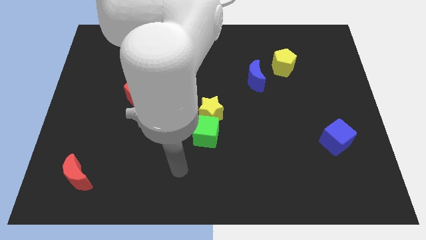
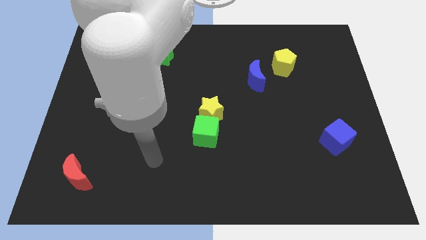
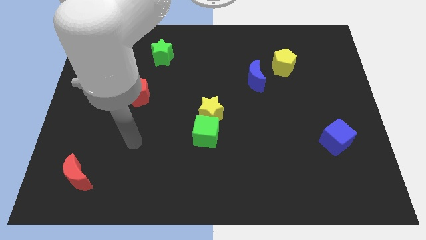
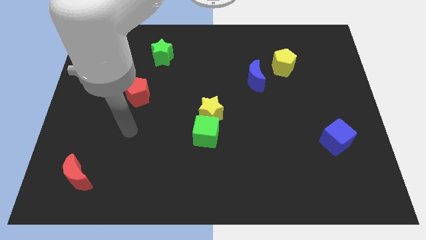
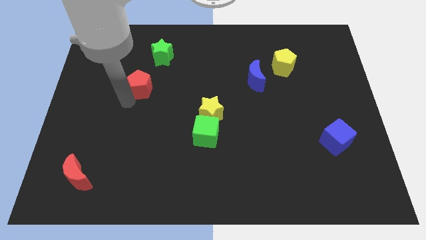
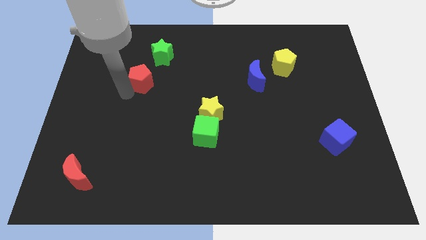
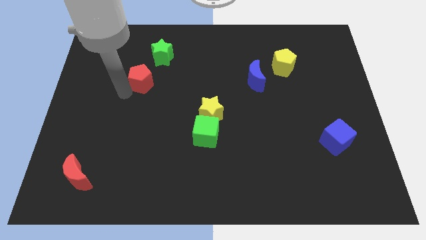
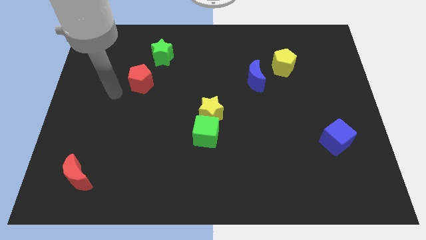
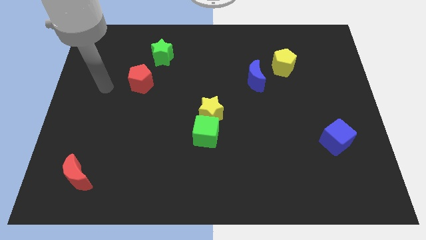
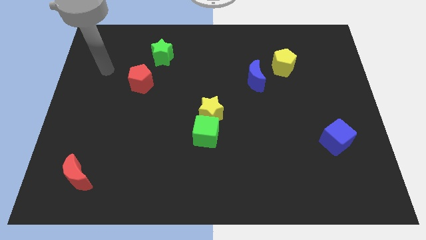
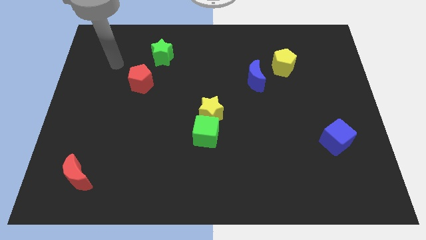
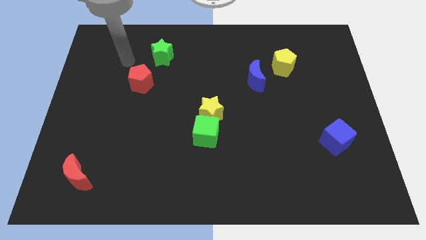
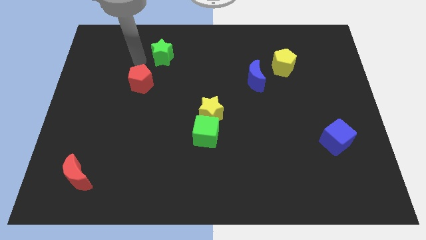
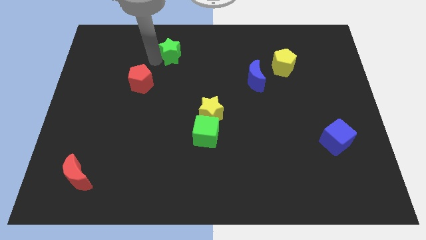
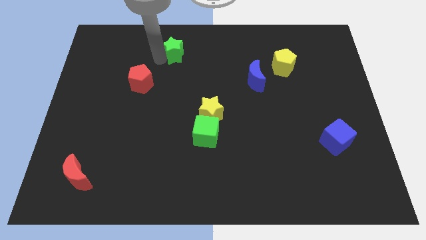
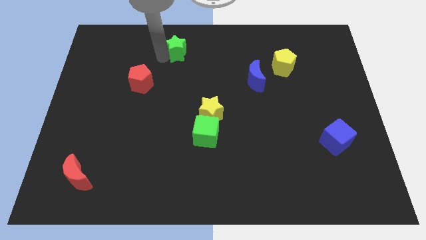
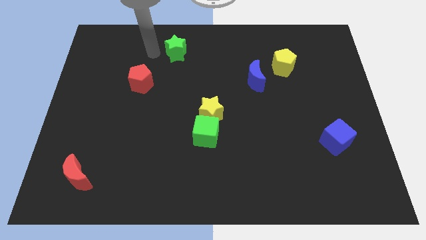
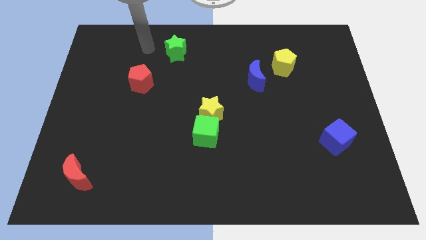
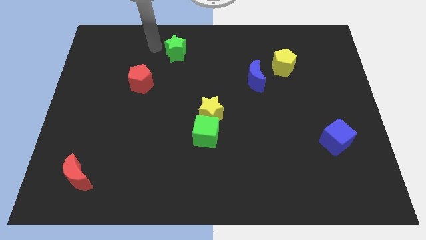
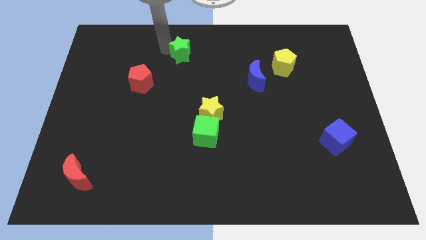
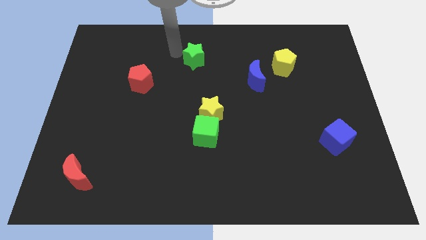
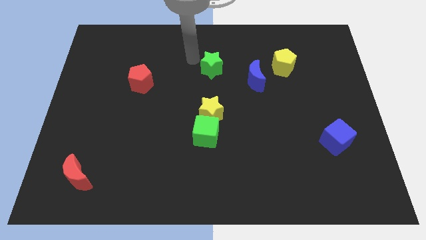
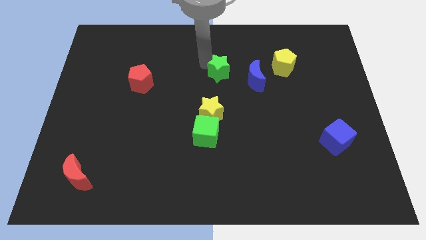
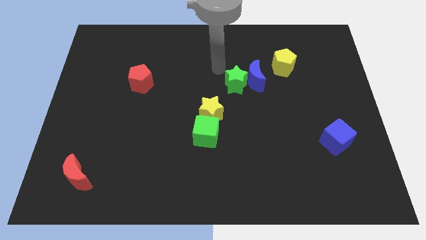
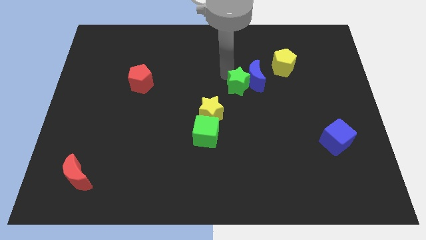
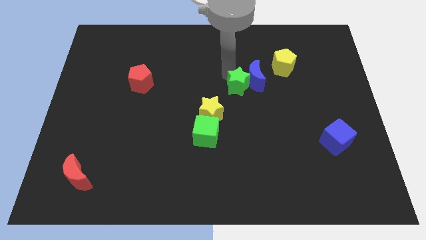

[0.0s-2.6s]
slide the green star towards the blue moon

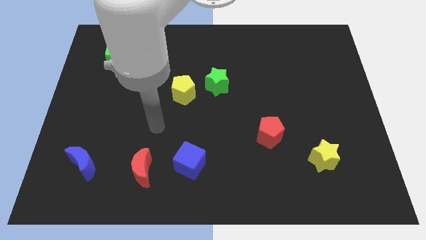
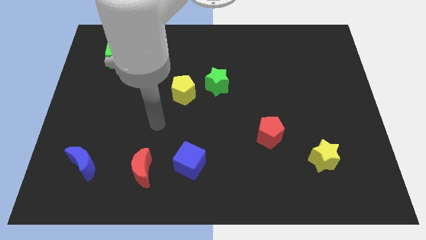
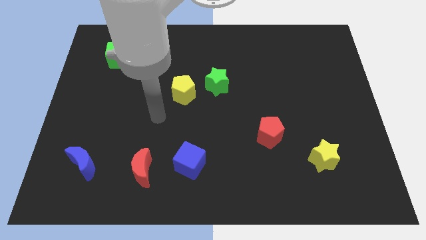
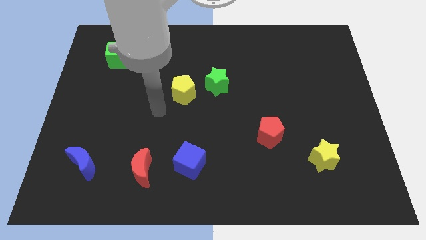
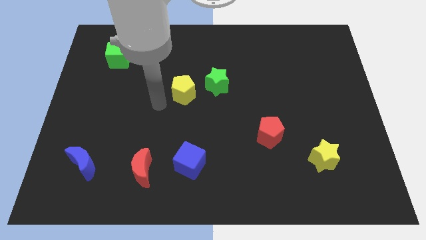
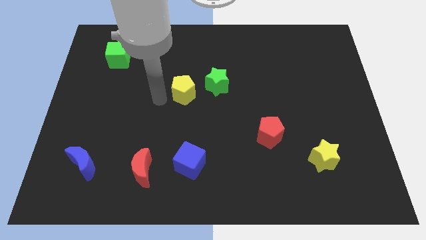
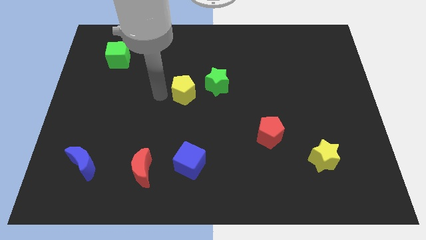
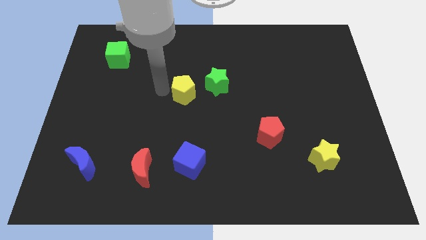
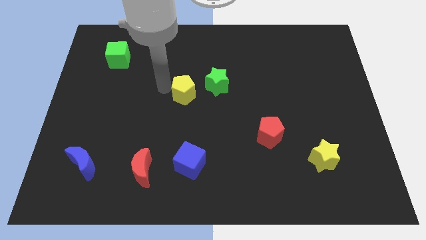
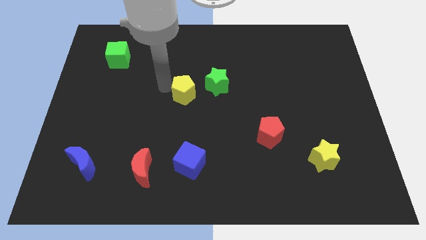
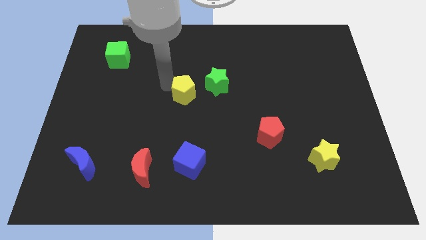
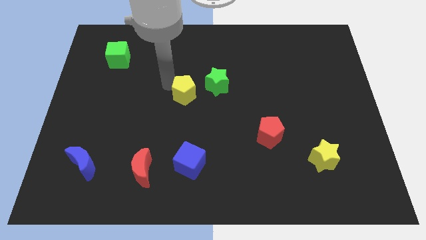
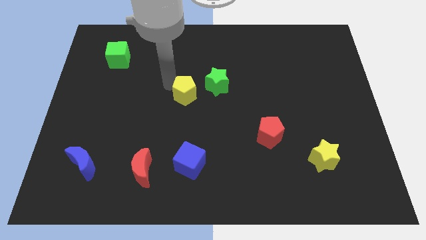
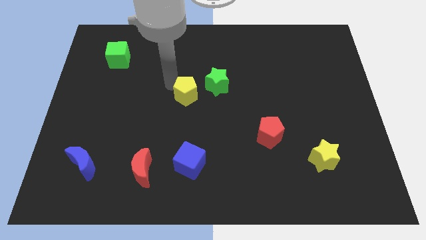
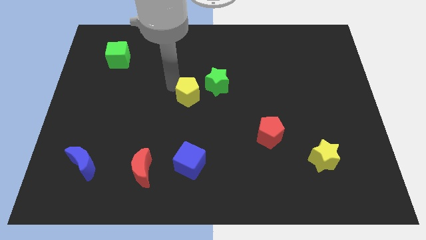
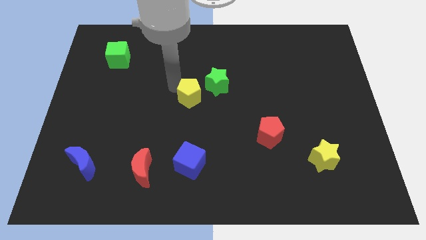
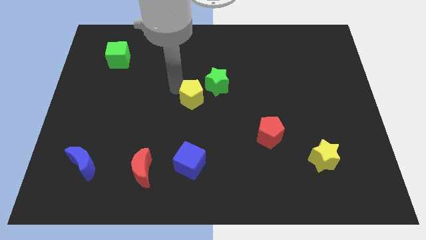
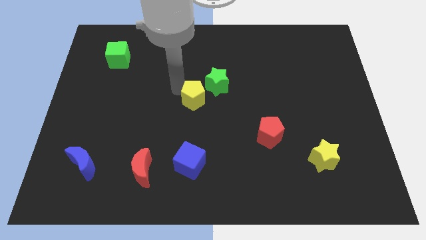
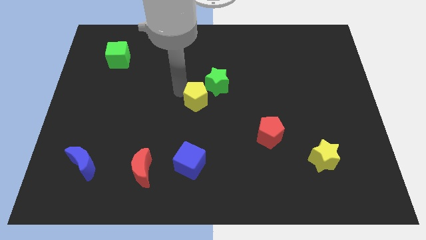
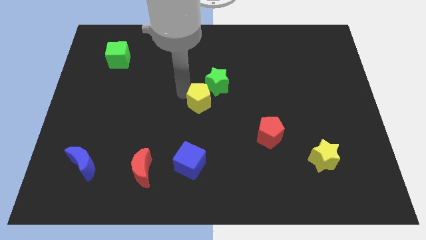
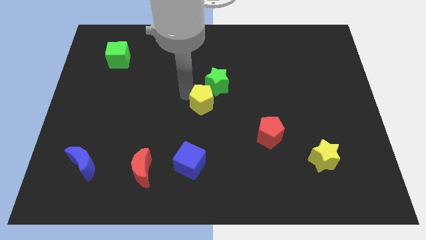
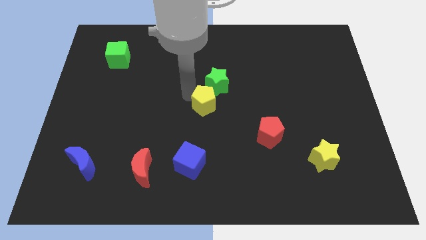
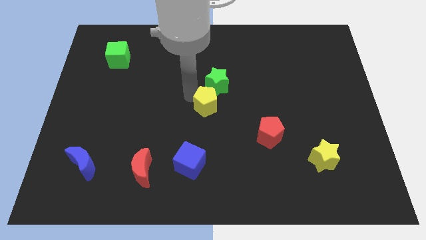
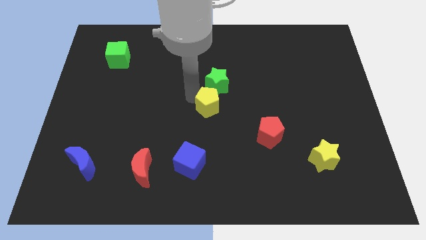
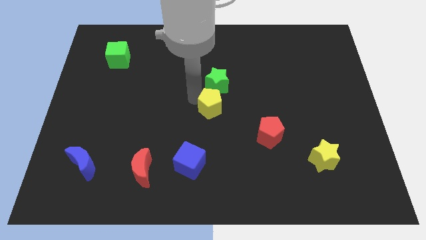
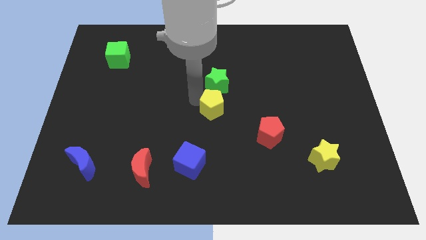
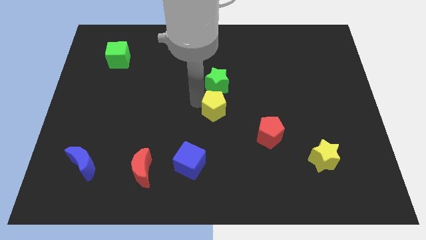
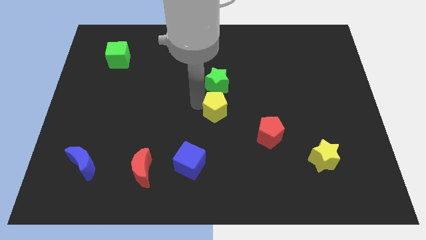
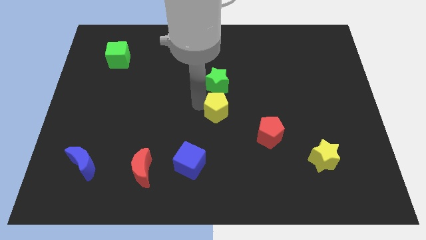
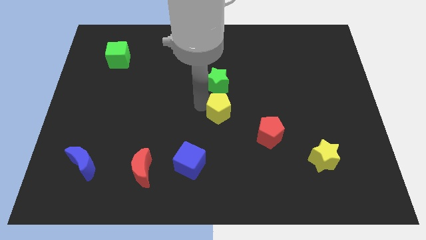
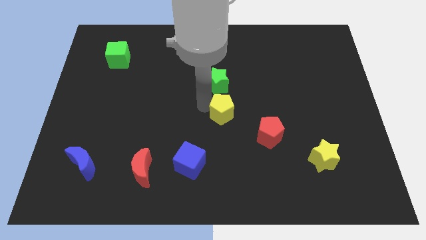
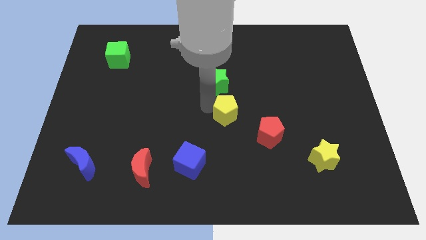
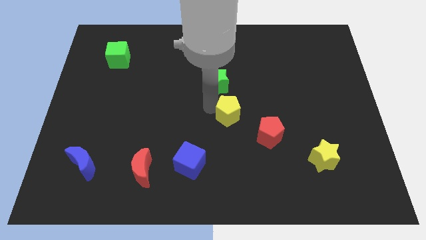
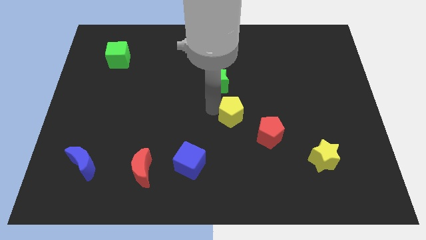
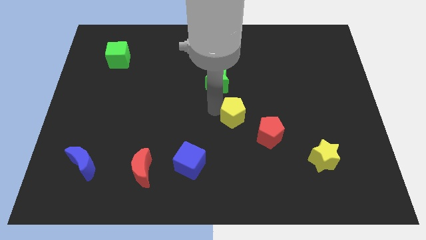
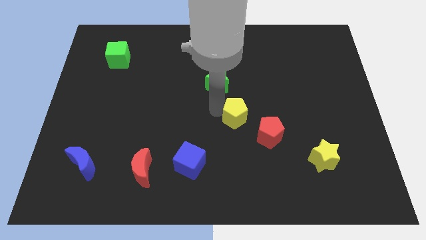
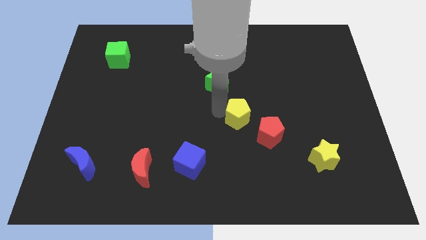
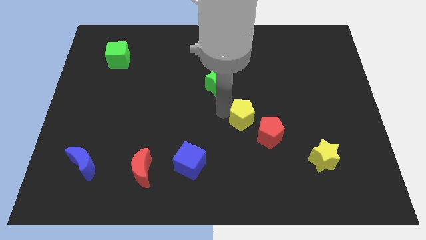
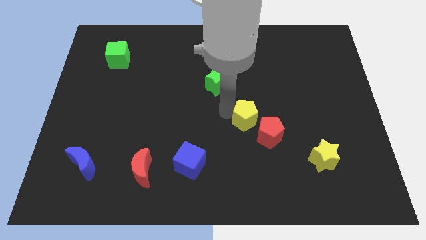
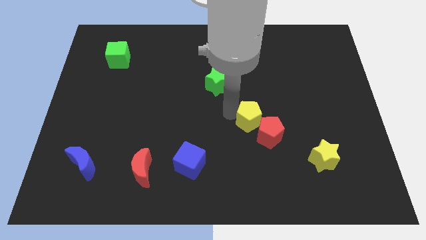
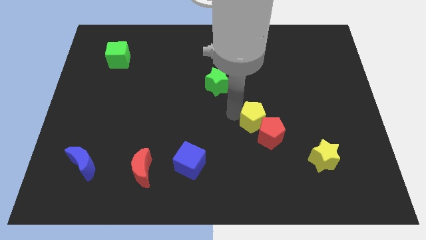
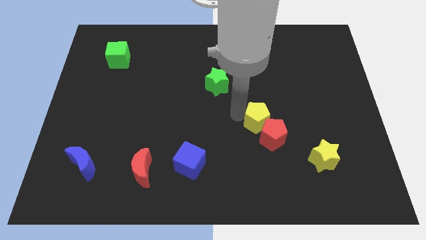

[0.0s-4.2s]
put the yellow pentagon to the red pentagon

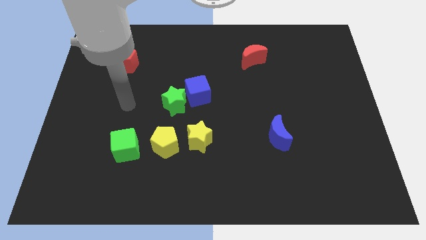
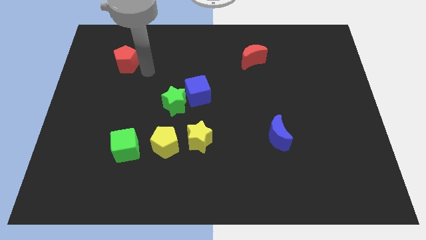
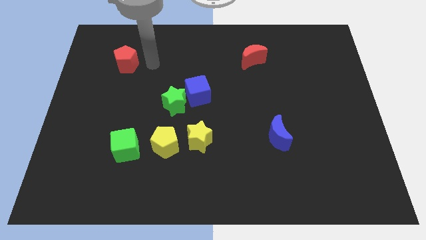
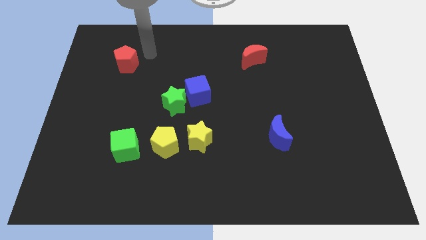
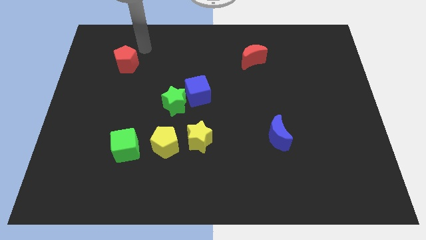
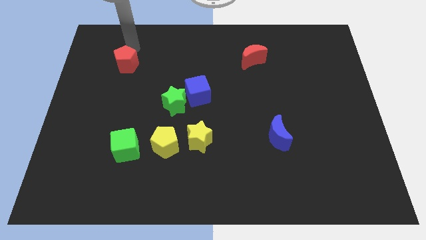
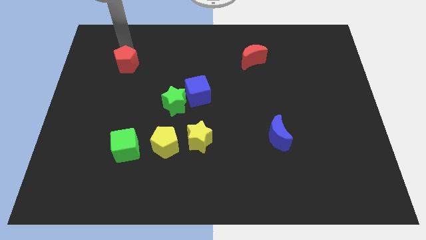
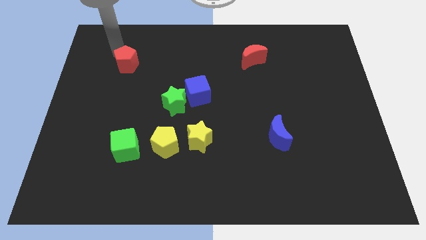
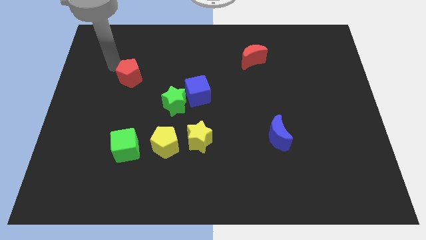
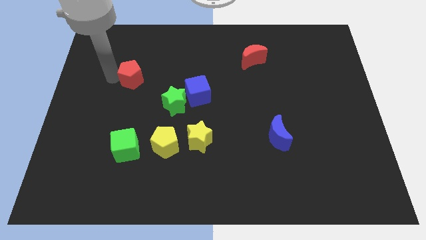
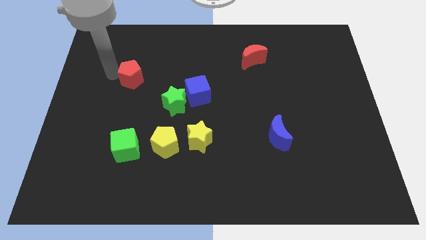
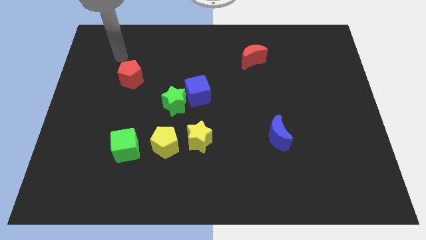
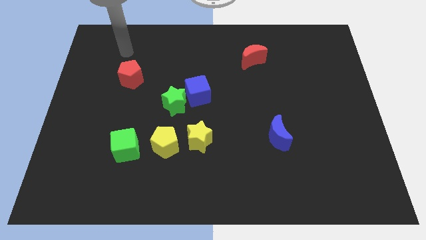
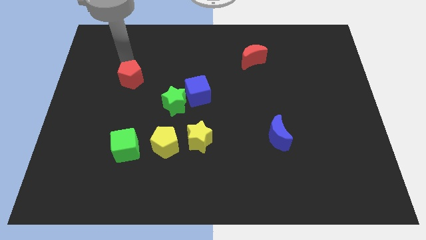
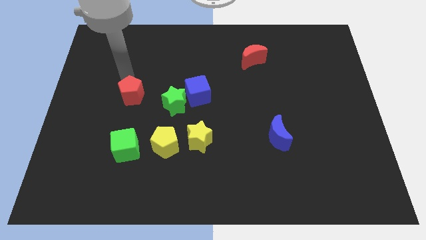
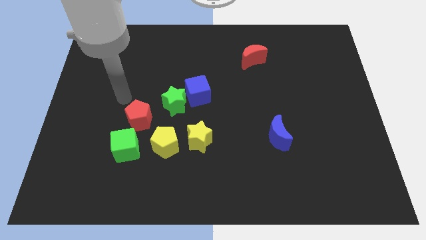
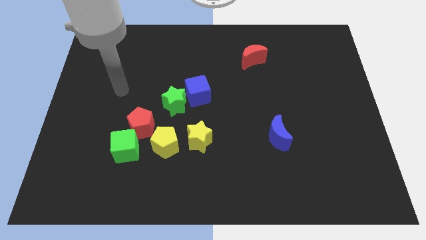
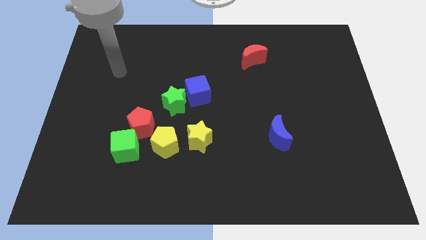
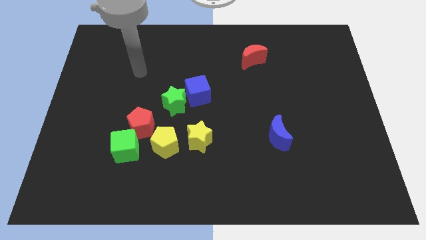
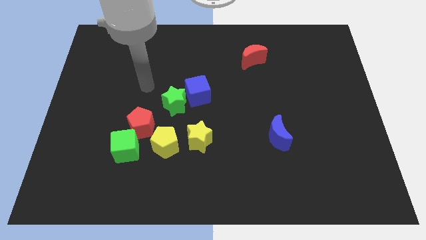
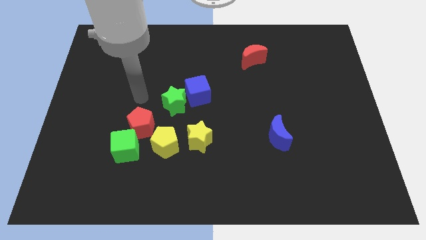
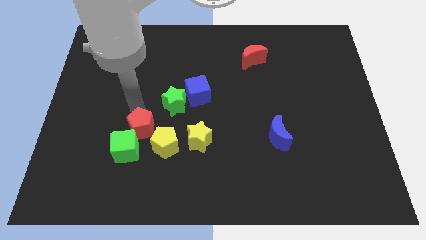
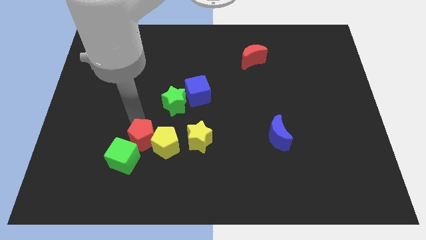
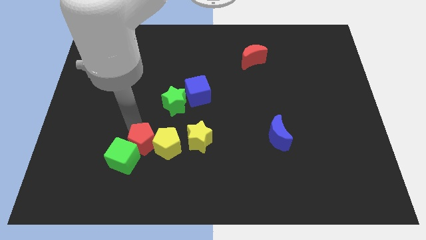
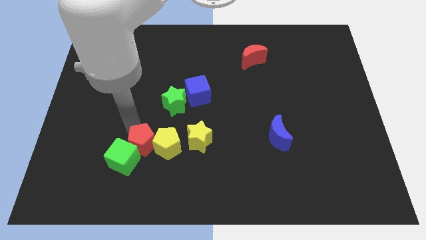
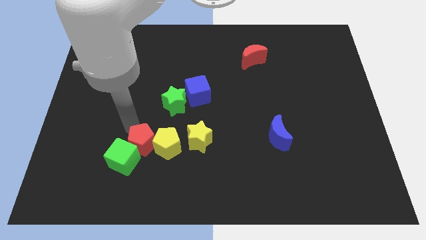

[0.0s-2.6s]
slide the red pentagon towards the green cube
